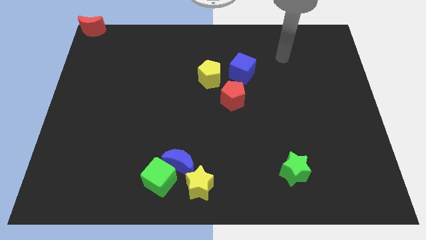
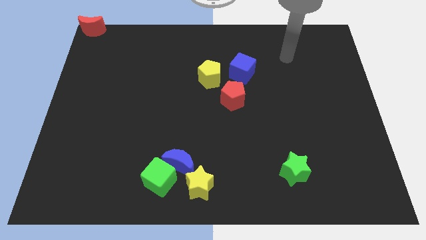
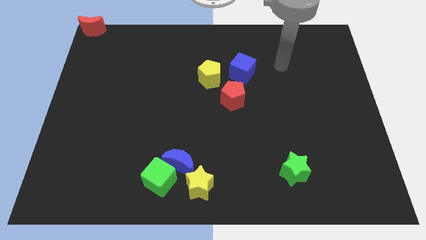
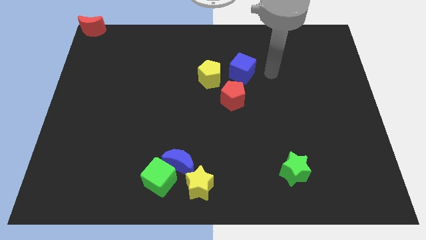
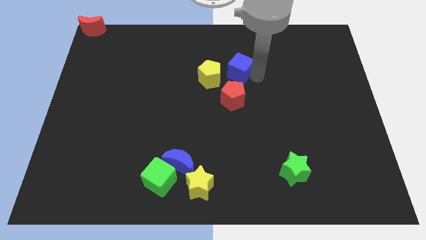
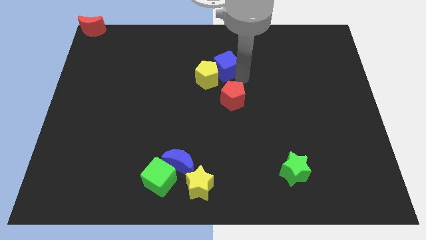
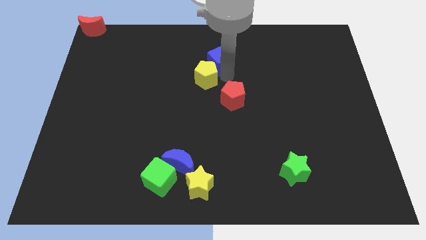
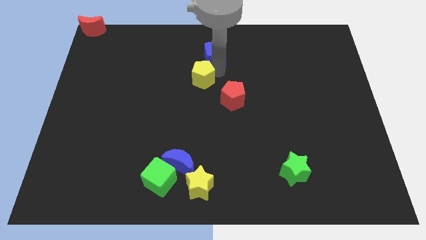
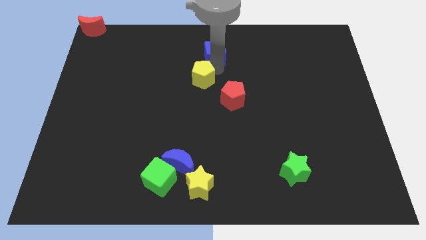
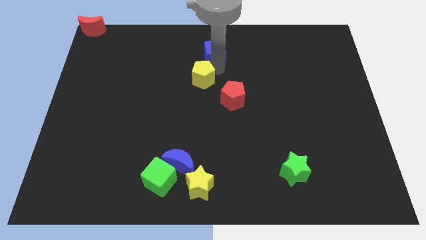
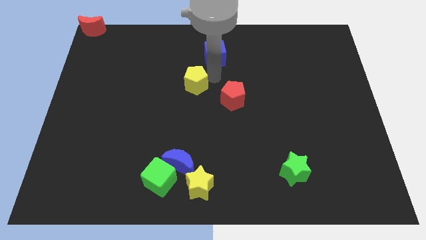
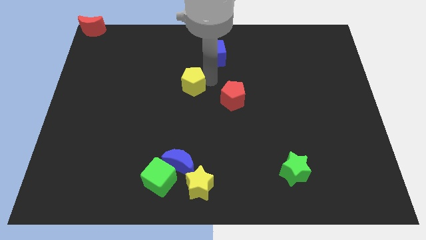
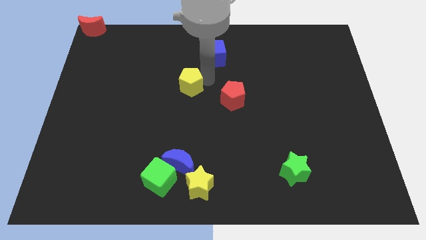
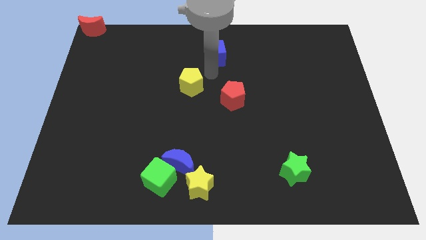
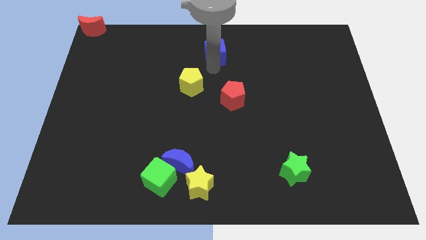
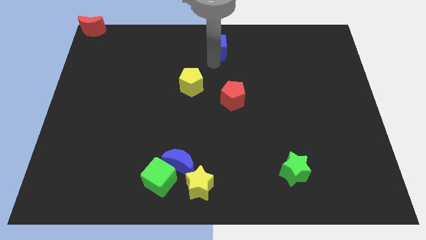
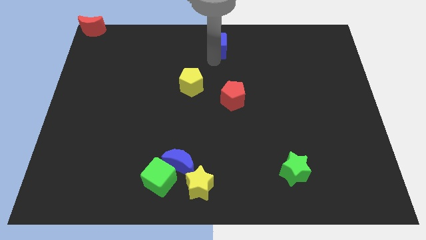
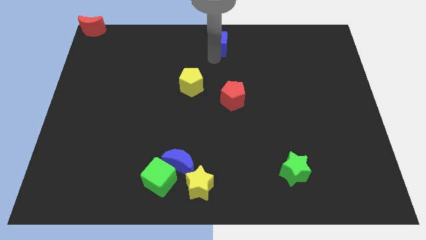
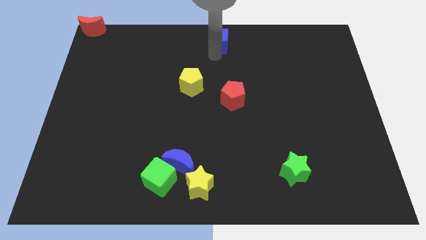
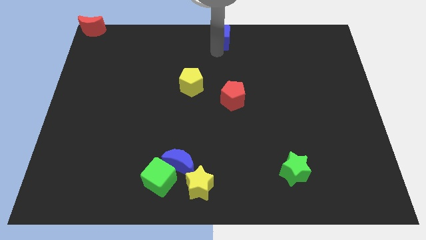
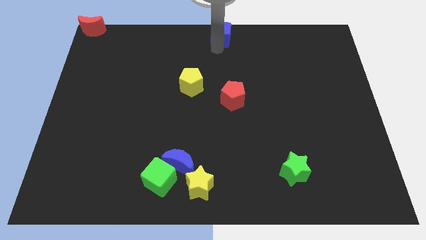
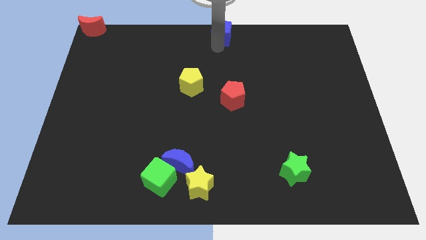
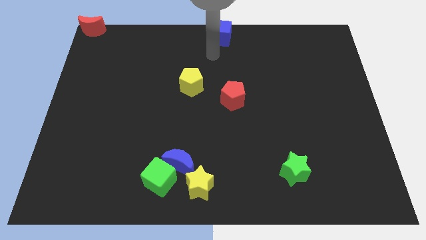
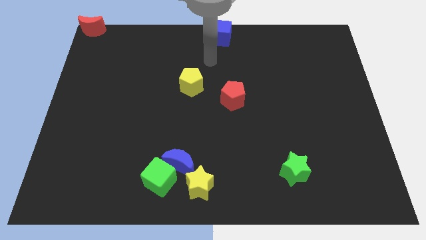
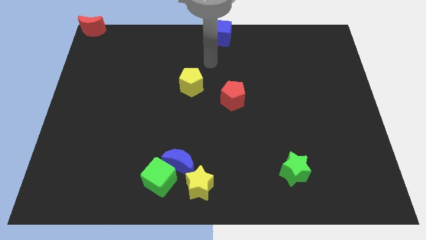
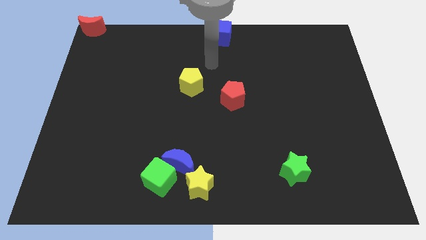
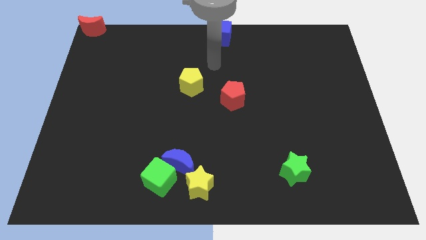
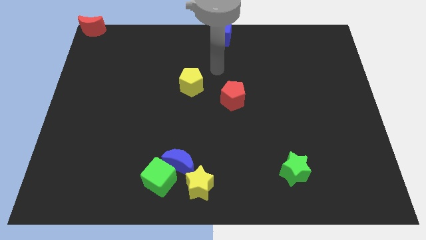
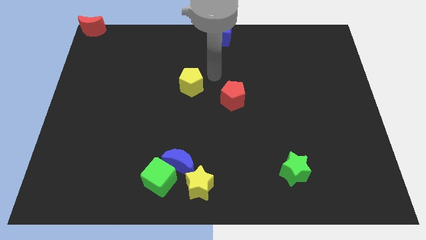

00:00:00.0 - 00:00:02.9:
push the blue cube to the top center

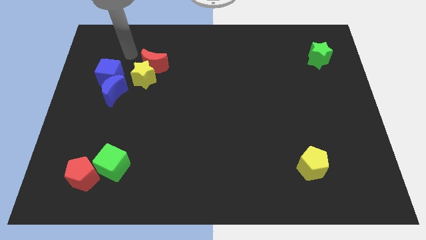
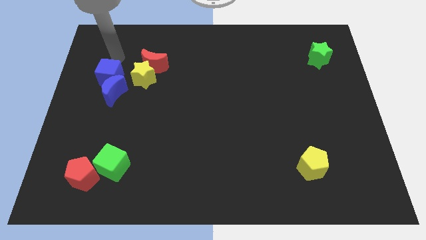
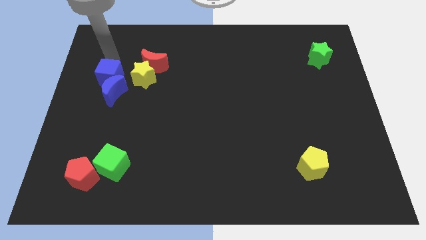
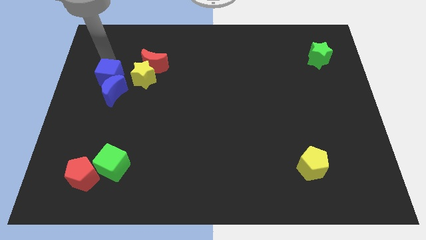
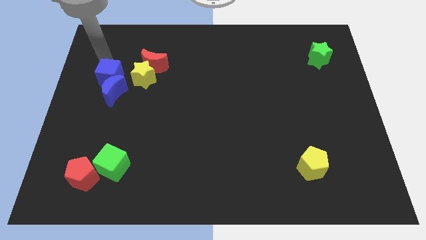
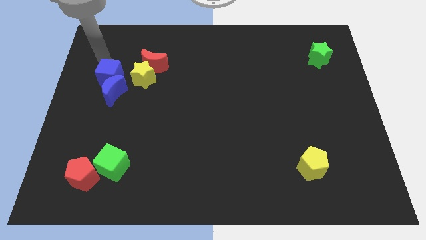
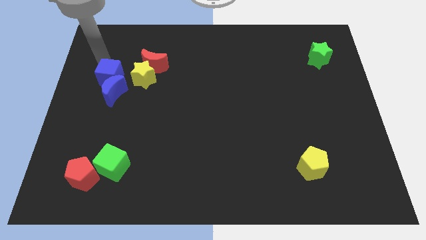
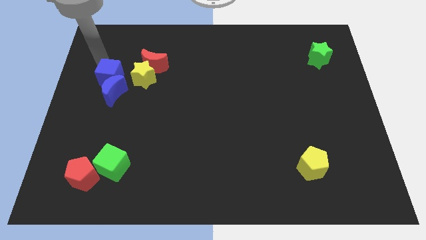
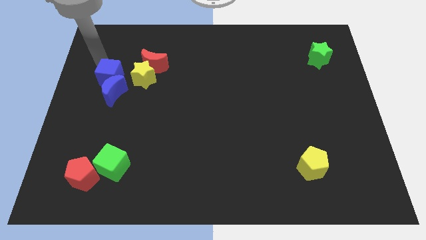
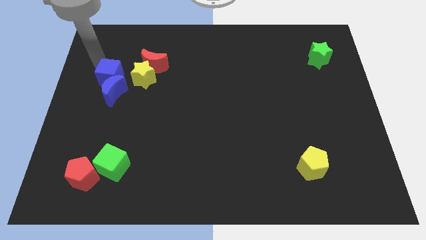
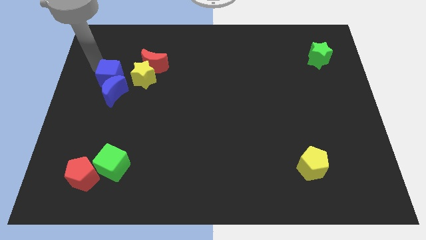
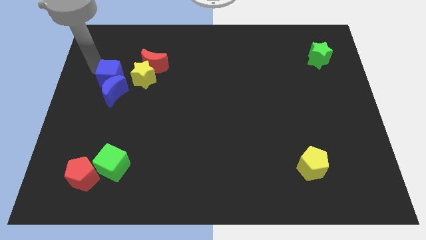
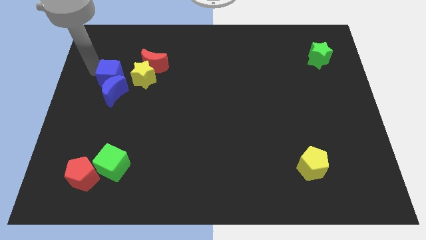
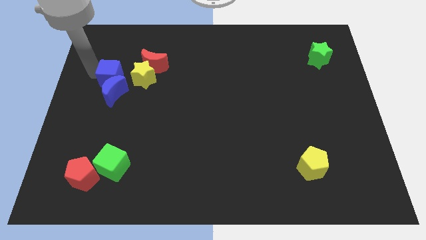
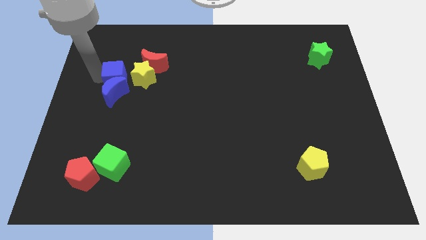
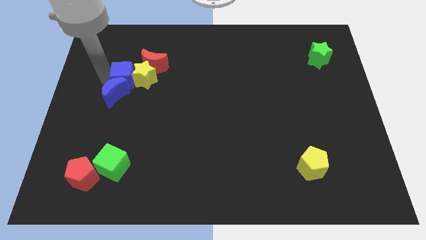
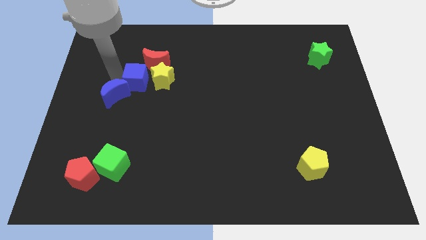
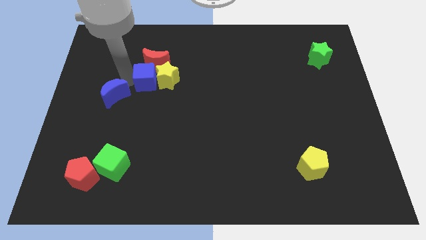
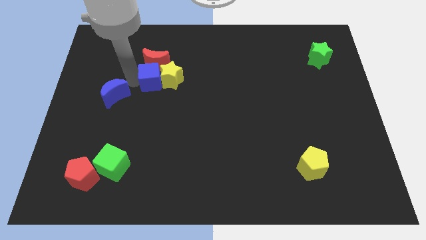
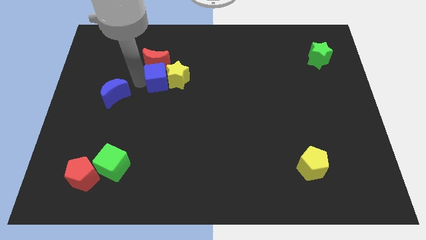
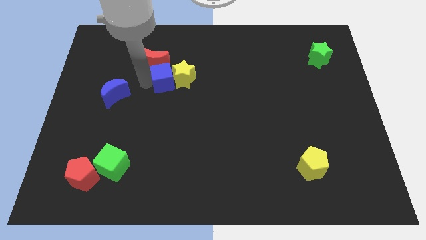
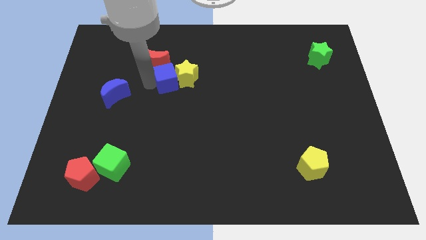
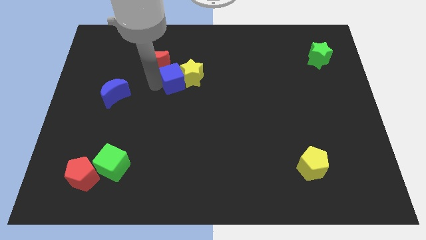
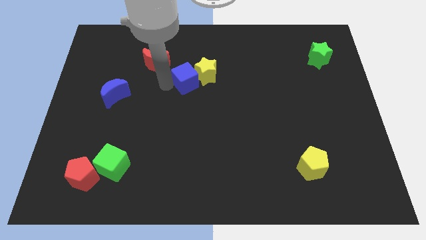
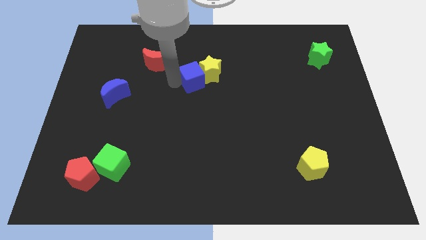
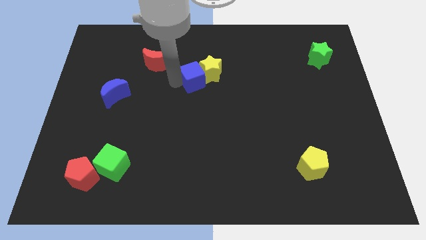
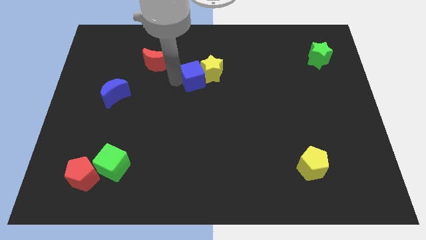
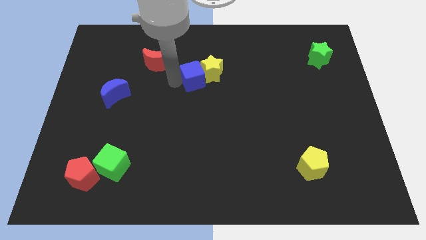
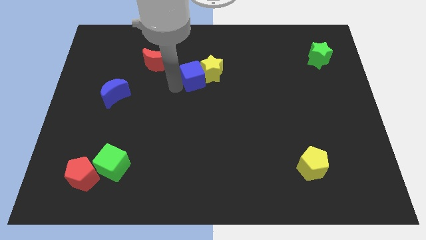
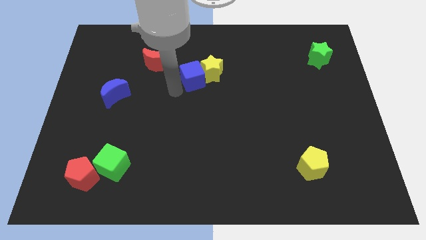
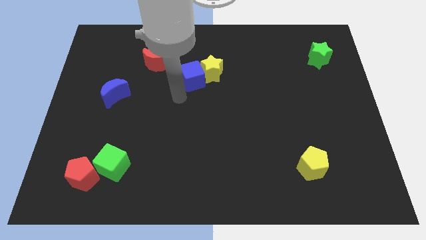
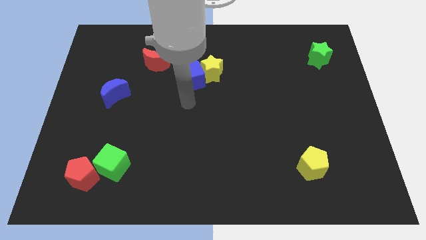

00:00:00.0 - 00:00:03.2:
push the blue cube and yellow star towards the top center of the board

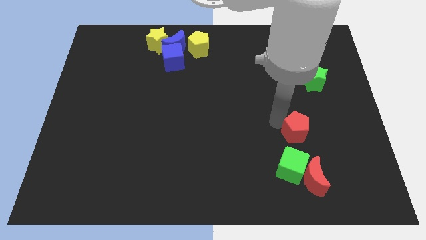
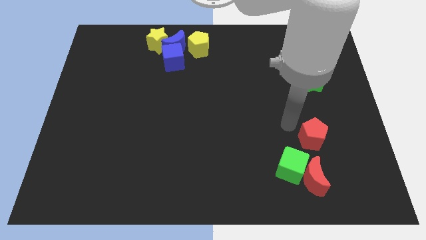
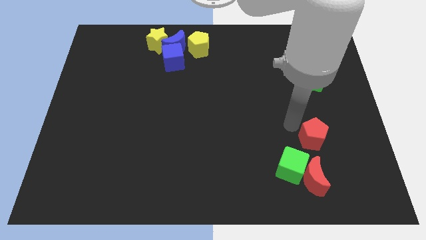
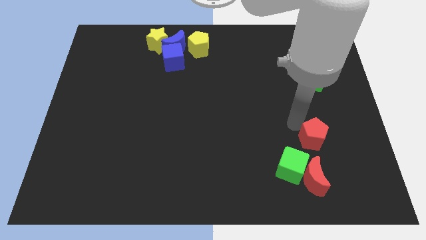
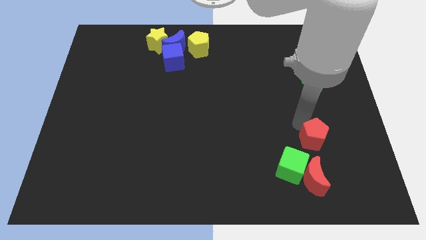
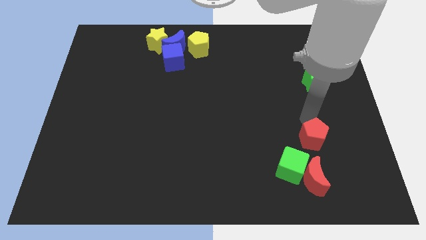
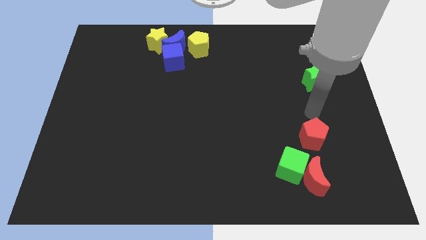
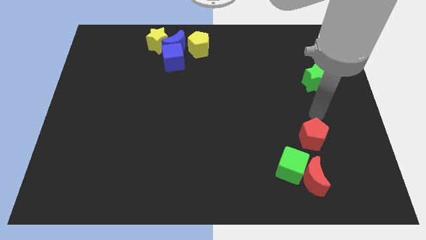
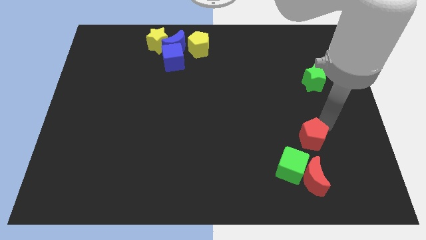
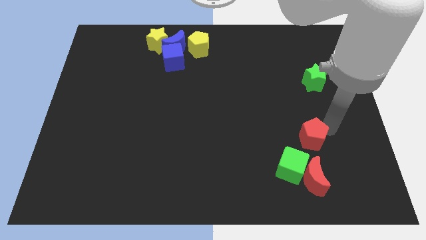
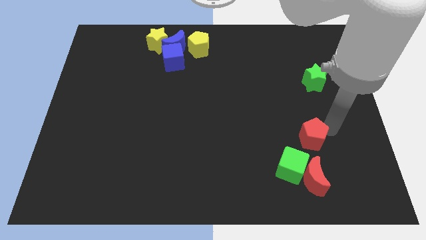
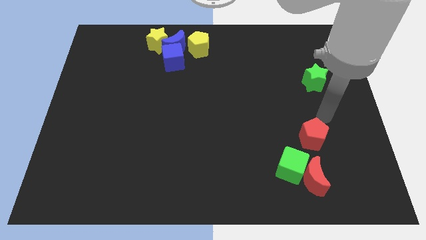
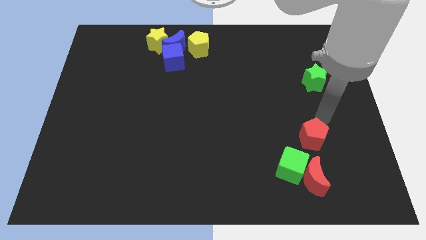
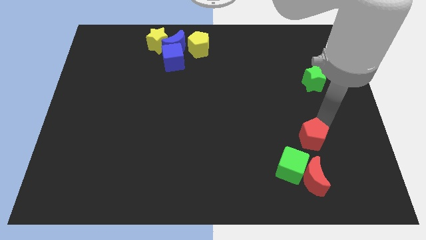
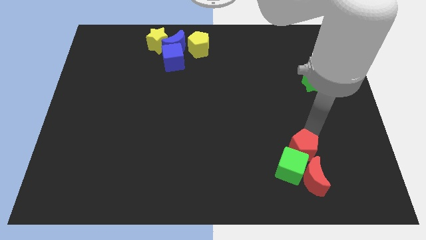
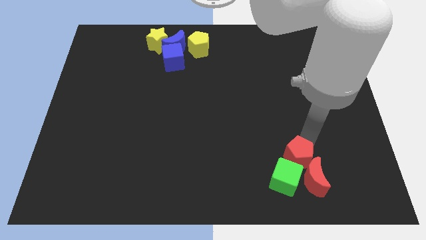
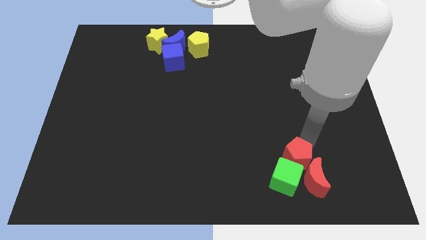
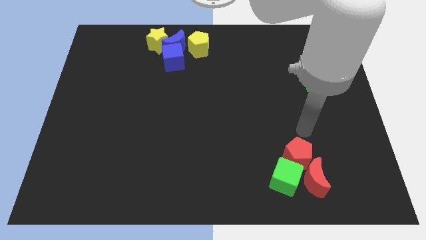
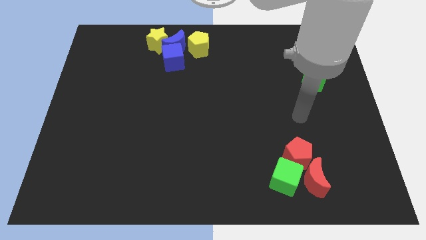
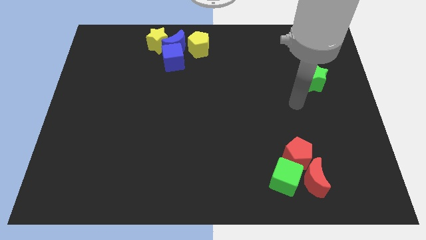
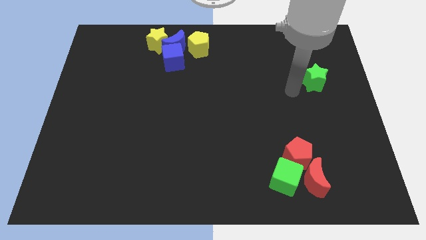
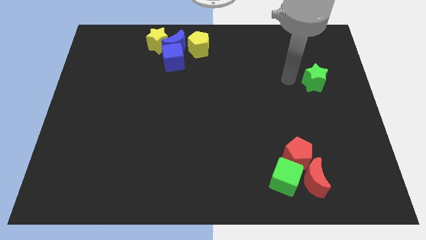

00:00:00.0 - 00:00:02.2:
push red pentagon close to green cube

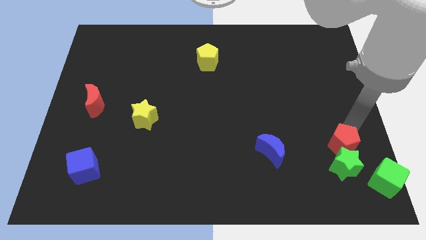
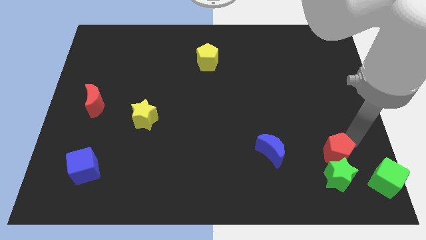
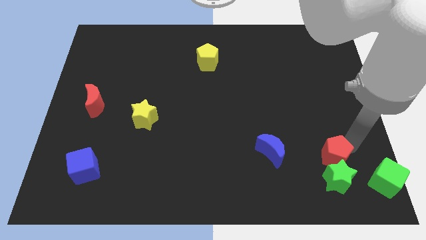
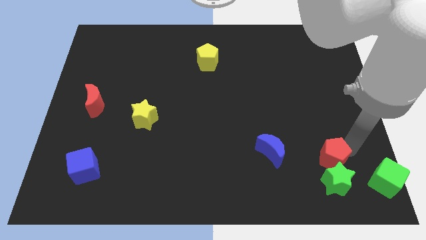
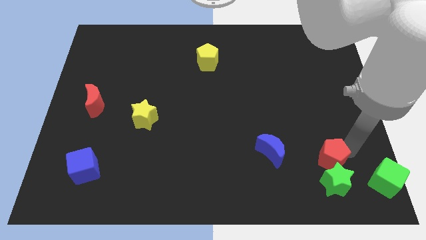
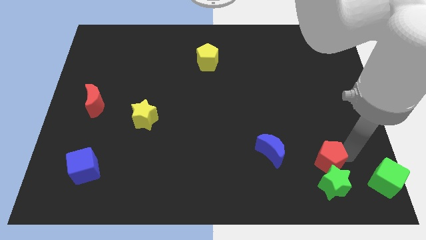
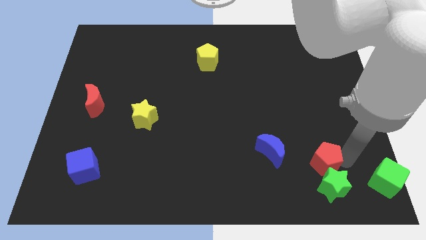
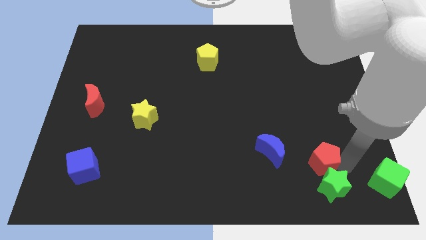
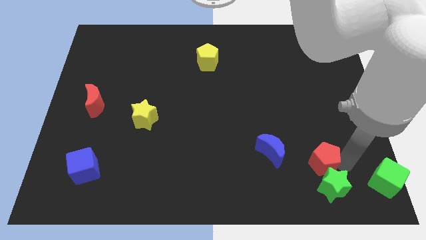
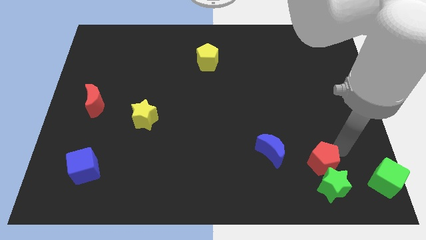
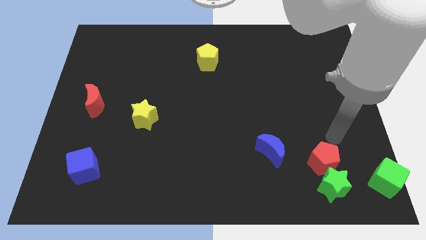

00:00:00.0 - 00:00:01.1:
push the red pentagon along with the green star slightly to the bottom
